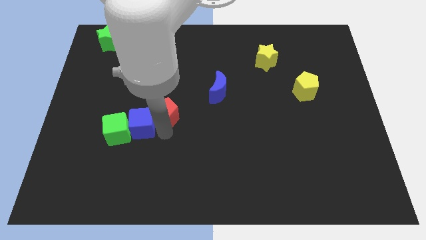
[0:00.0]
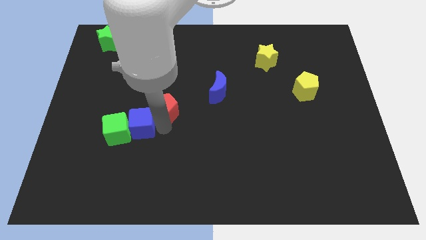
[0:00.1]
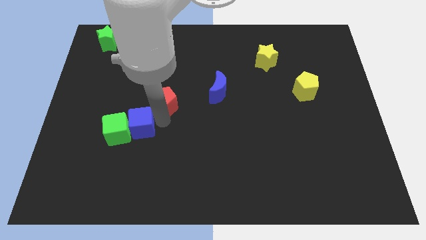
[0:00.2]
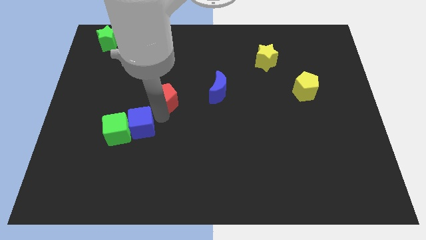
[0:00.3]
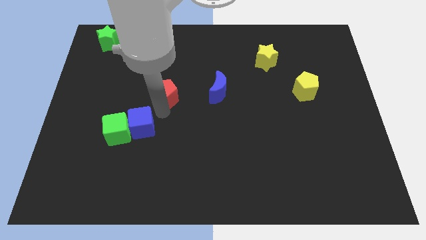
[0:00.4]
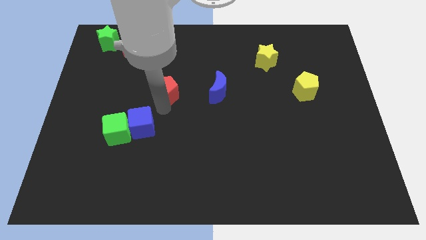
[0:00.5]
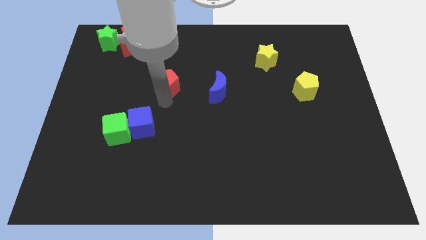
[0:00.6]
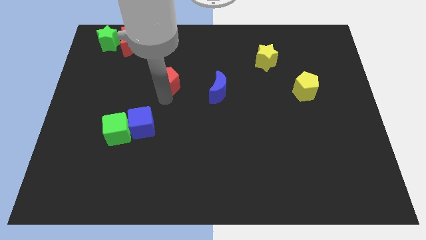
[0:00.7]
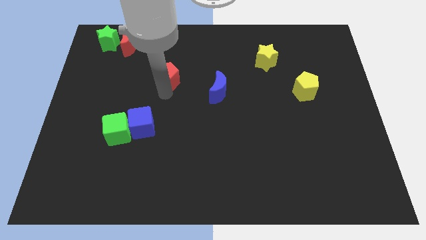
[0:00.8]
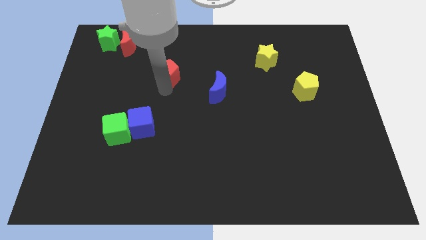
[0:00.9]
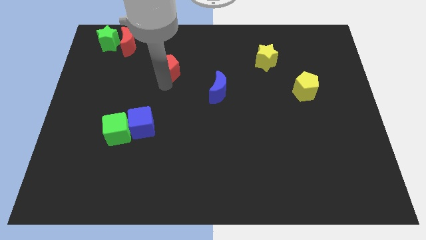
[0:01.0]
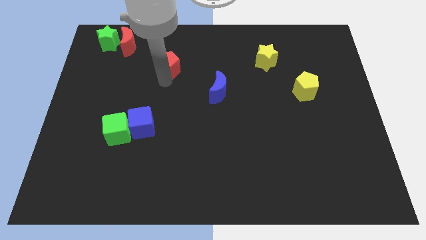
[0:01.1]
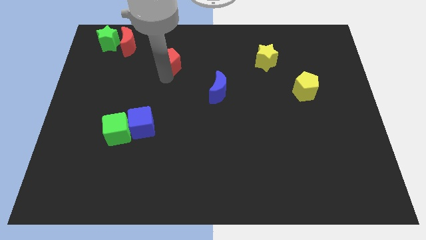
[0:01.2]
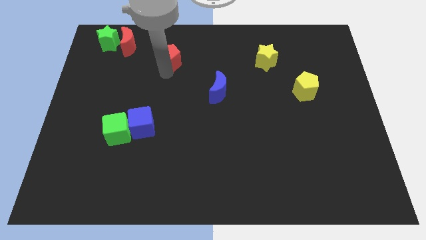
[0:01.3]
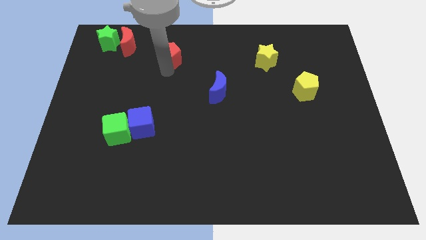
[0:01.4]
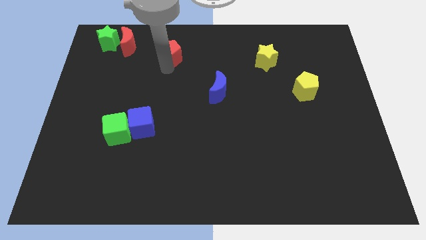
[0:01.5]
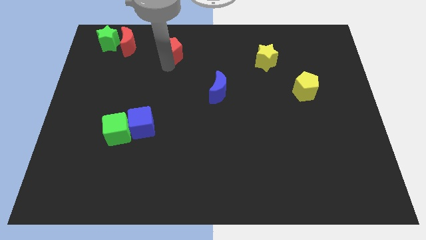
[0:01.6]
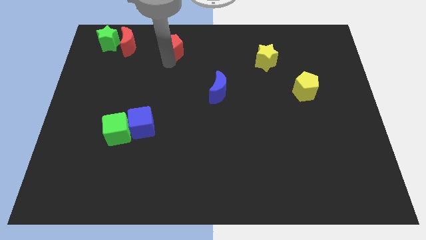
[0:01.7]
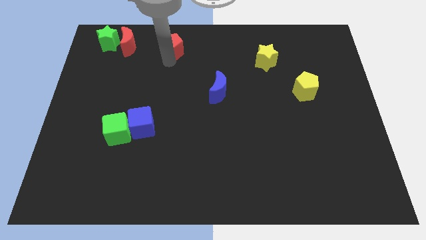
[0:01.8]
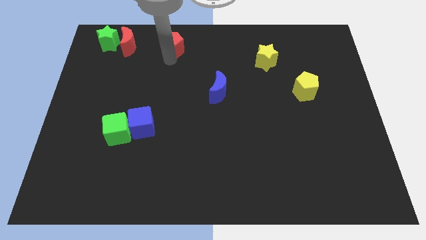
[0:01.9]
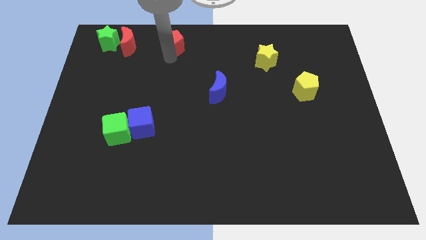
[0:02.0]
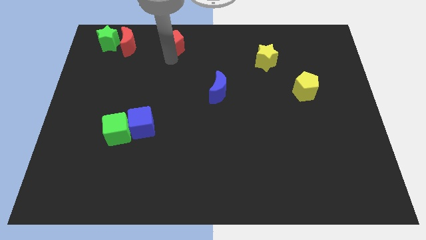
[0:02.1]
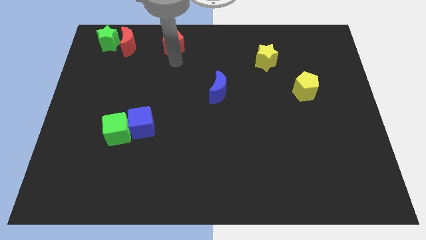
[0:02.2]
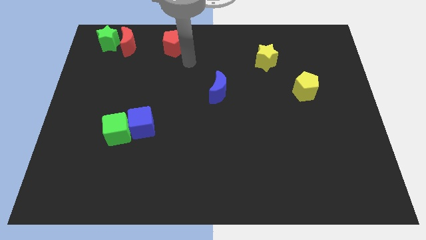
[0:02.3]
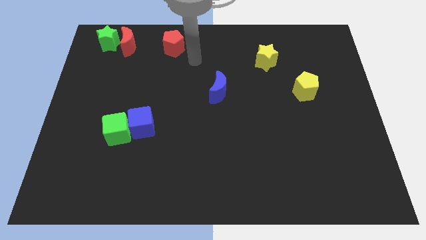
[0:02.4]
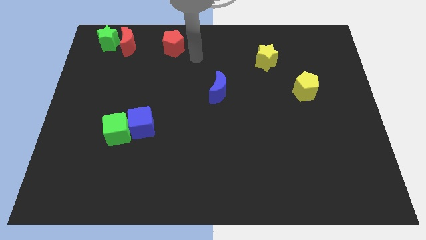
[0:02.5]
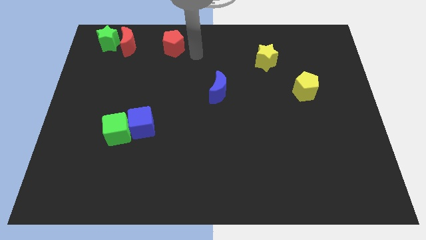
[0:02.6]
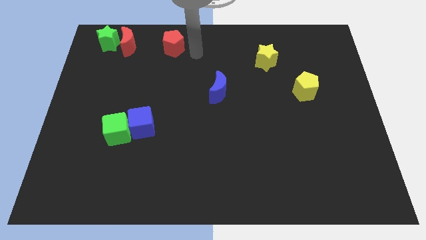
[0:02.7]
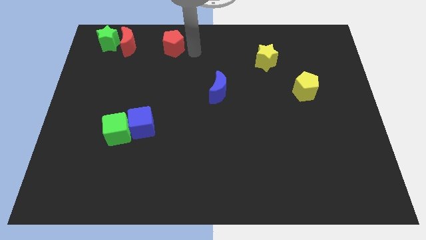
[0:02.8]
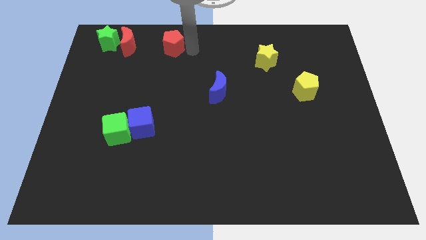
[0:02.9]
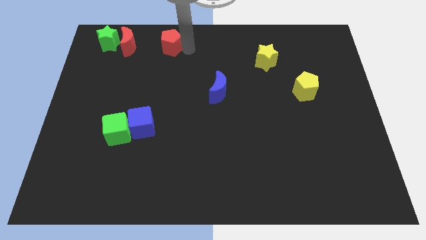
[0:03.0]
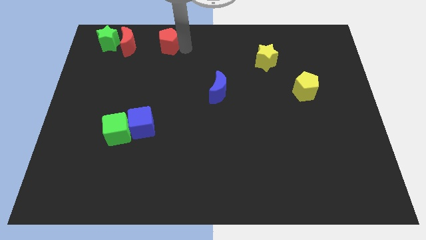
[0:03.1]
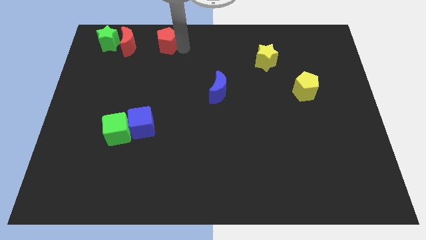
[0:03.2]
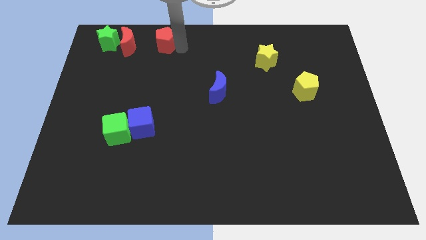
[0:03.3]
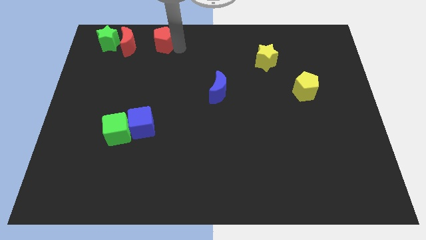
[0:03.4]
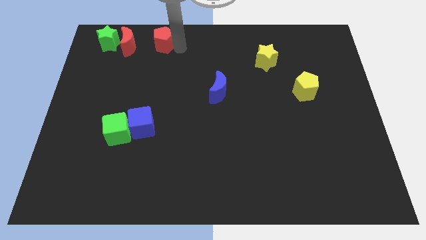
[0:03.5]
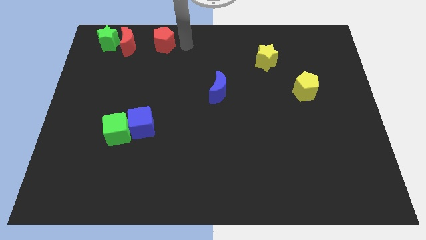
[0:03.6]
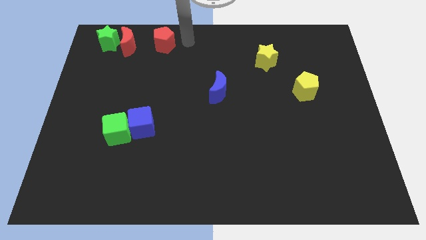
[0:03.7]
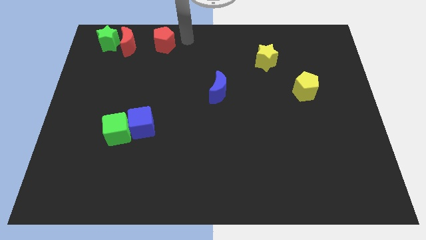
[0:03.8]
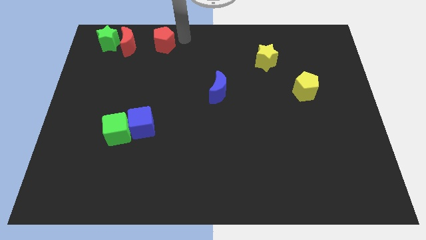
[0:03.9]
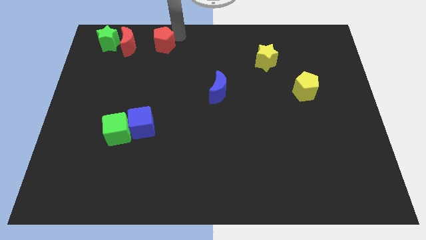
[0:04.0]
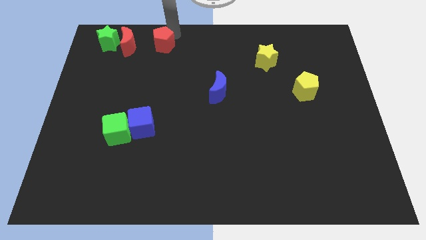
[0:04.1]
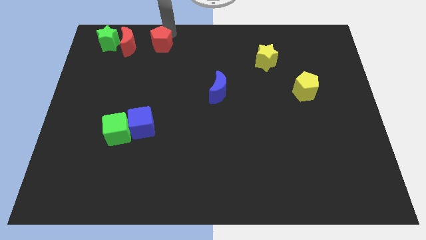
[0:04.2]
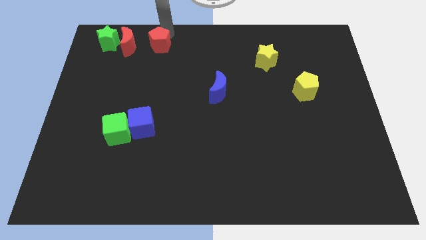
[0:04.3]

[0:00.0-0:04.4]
place red pentagon right to red crescent

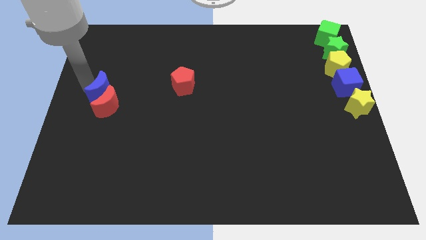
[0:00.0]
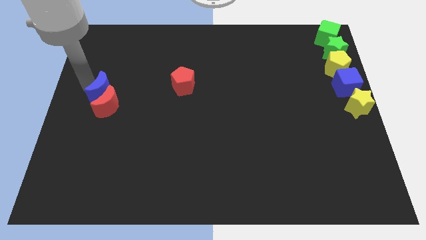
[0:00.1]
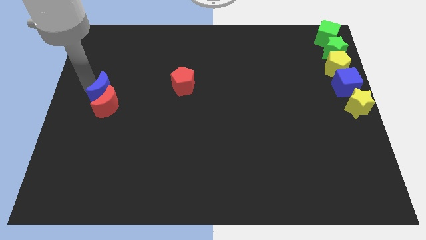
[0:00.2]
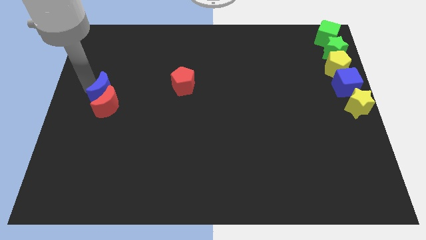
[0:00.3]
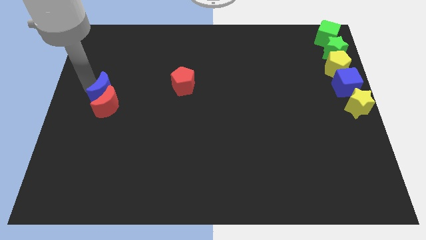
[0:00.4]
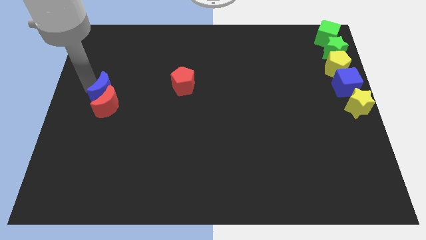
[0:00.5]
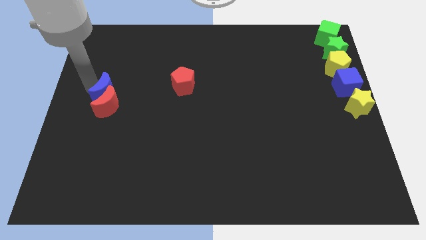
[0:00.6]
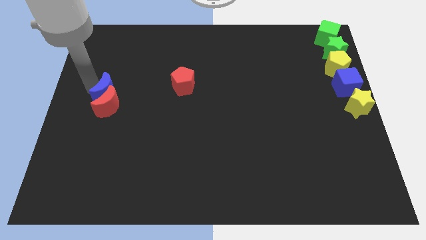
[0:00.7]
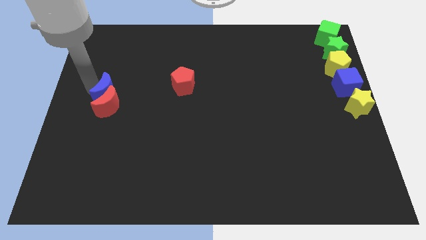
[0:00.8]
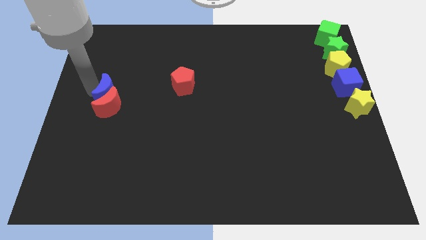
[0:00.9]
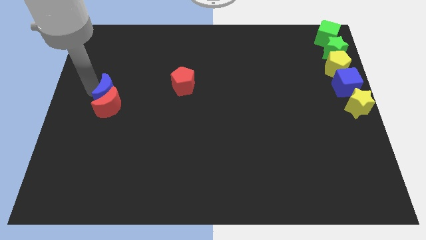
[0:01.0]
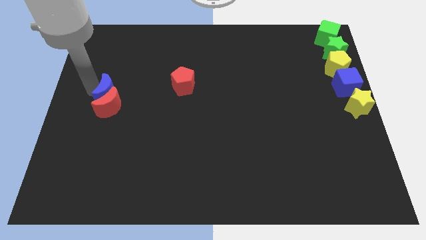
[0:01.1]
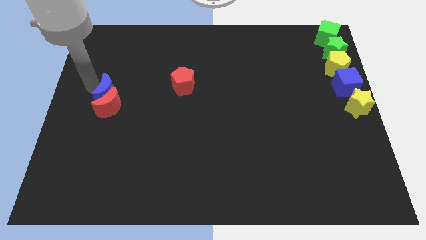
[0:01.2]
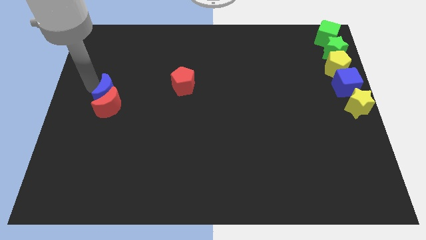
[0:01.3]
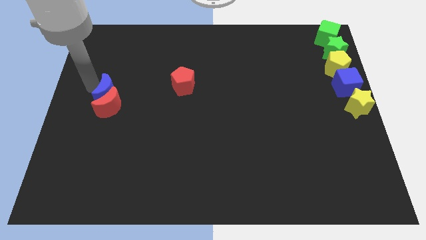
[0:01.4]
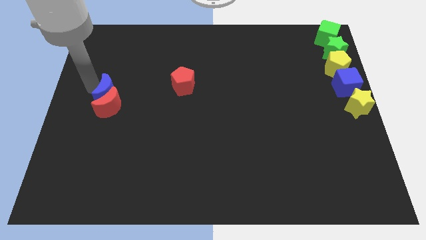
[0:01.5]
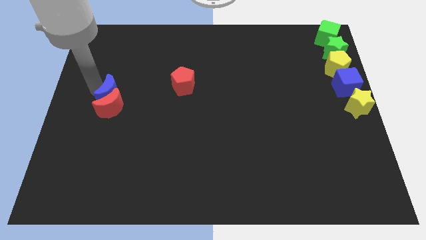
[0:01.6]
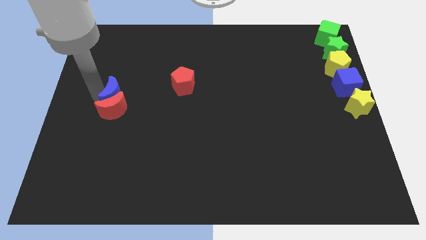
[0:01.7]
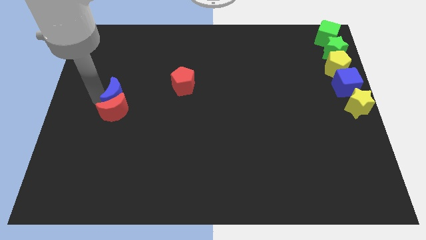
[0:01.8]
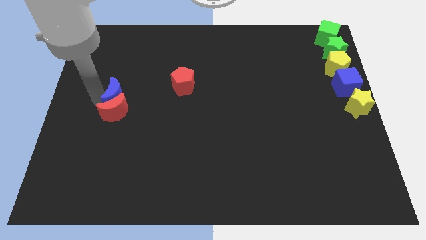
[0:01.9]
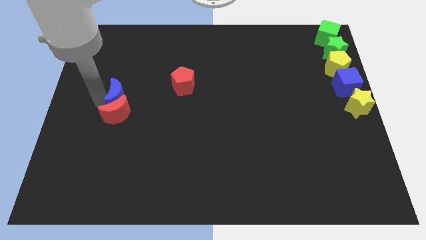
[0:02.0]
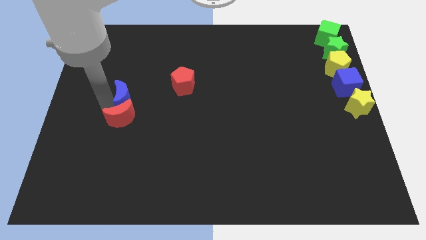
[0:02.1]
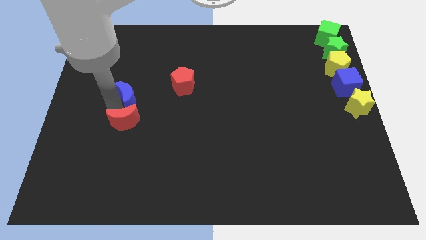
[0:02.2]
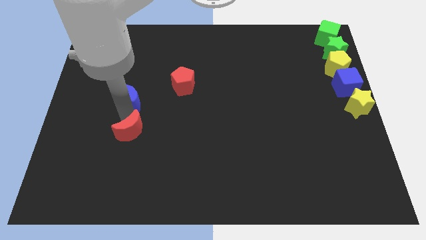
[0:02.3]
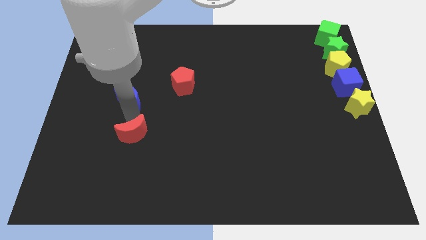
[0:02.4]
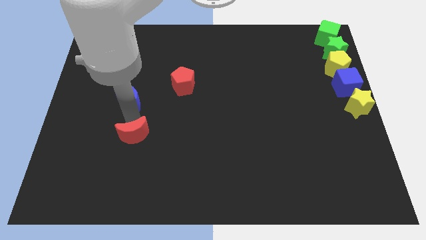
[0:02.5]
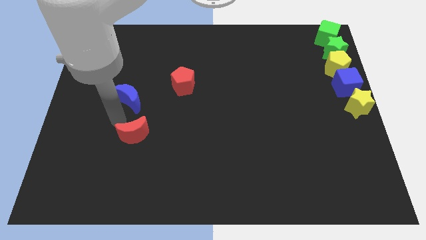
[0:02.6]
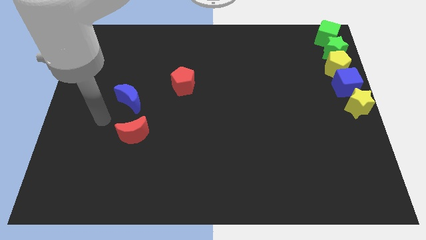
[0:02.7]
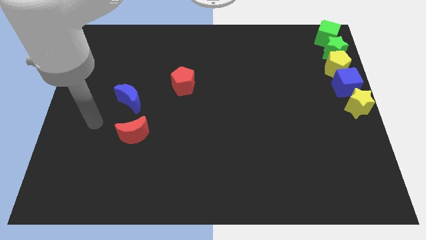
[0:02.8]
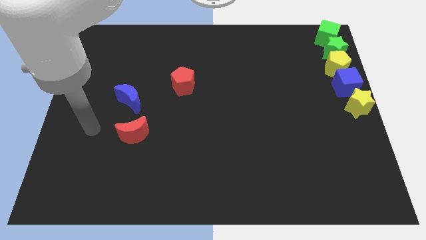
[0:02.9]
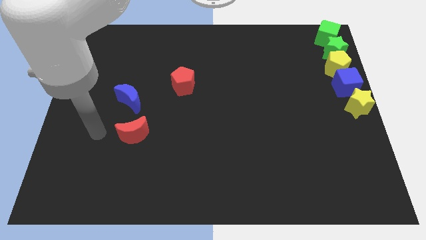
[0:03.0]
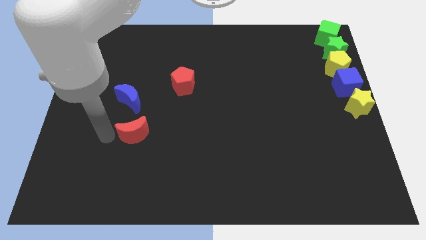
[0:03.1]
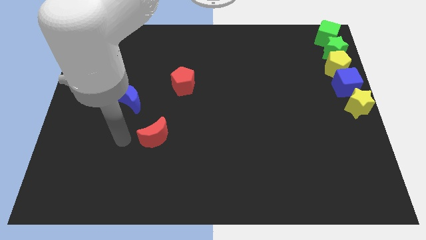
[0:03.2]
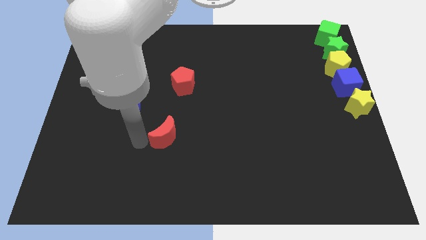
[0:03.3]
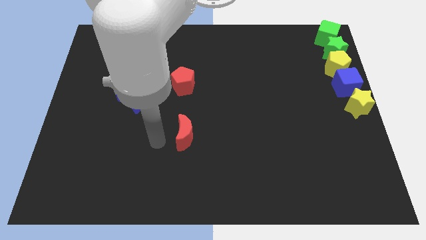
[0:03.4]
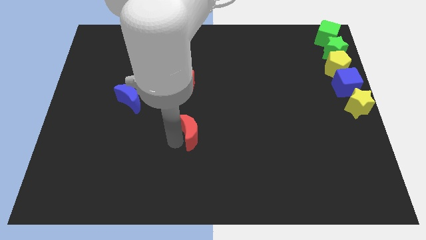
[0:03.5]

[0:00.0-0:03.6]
separate the crescents

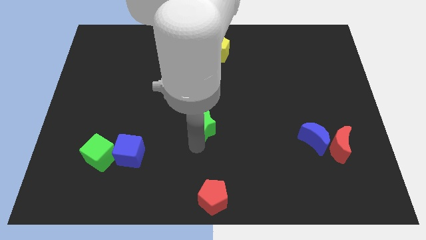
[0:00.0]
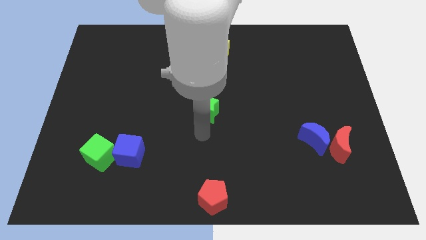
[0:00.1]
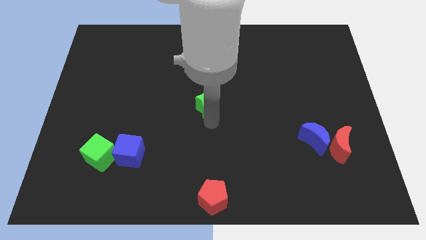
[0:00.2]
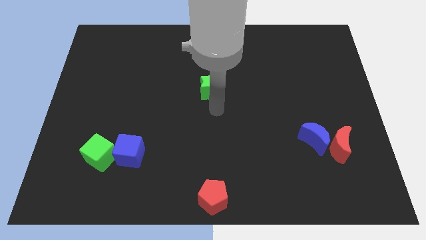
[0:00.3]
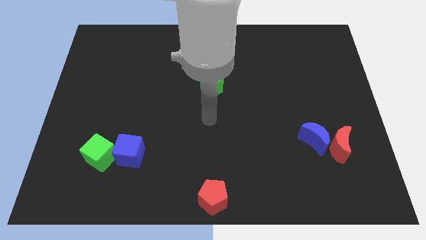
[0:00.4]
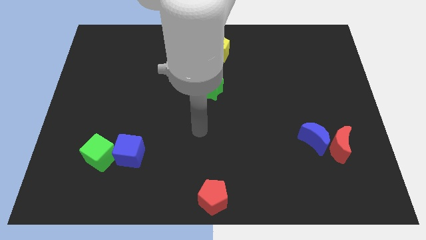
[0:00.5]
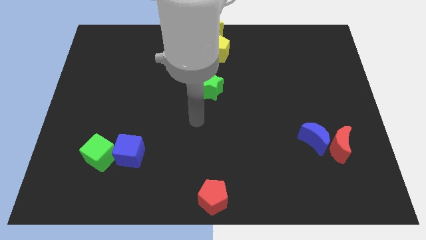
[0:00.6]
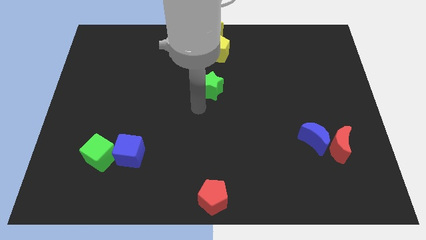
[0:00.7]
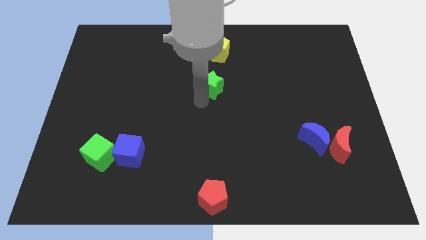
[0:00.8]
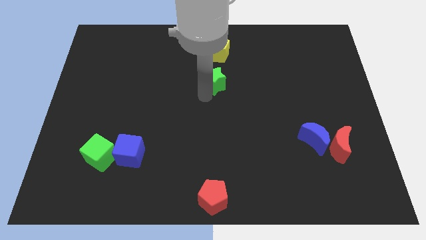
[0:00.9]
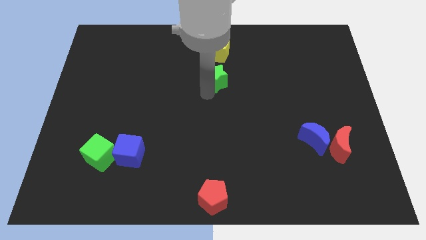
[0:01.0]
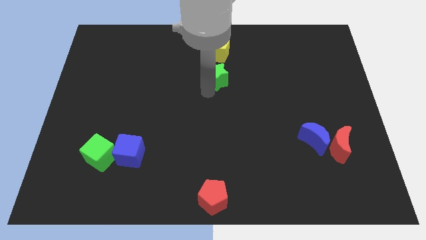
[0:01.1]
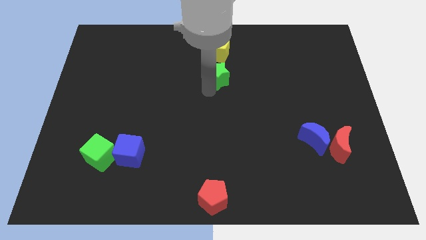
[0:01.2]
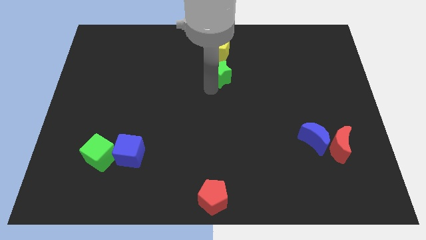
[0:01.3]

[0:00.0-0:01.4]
place the green star below the yellow pentagon
